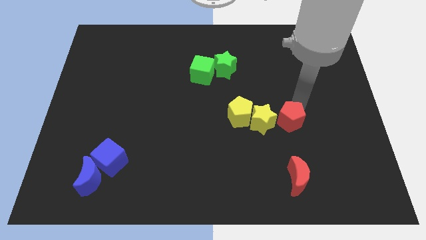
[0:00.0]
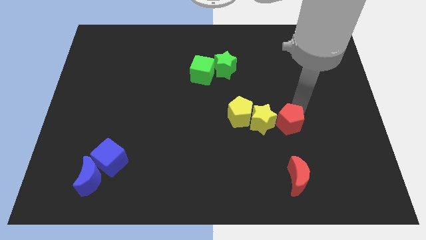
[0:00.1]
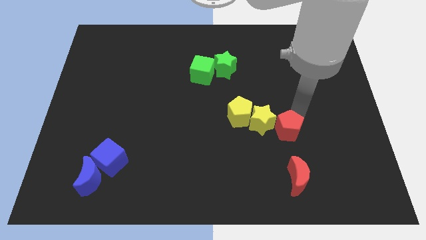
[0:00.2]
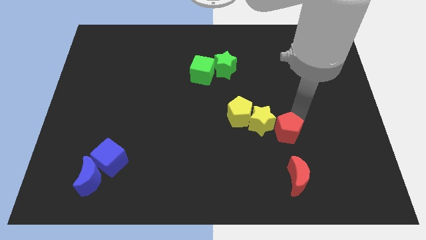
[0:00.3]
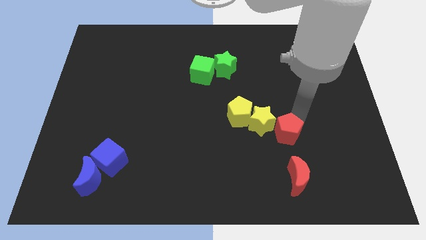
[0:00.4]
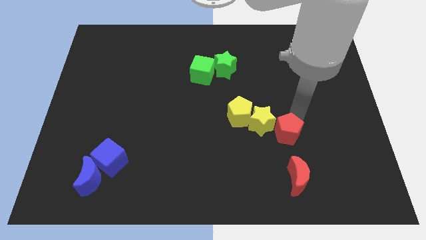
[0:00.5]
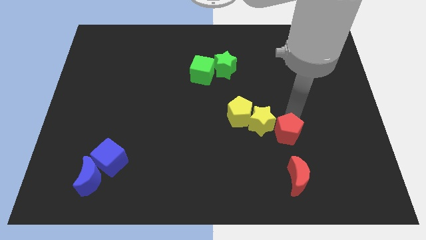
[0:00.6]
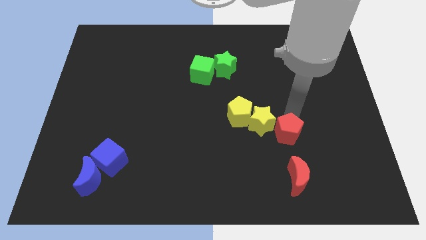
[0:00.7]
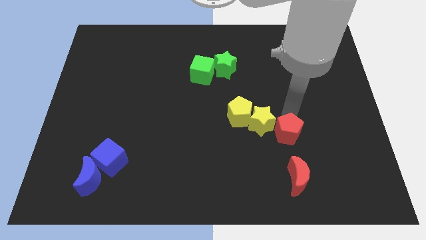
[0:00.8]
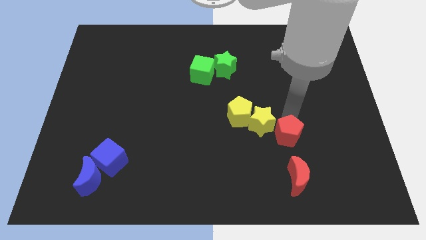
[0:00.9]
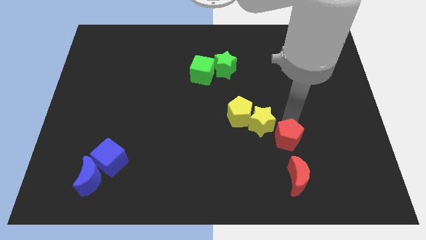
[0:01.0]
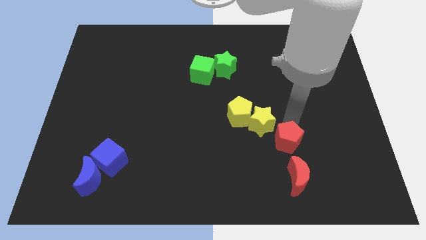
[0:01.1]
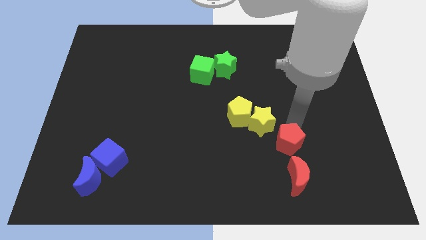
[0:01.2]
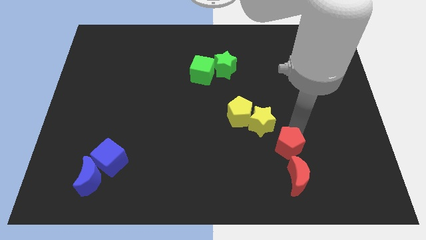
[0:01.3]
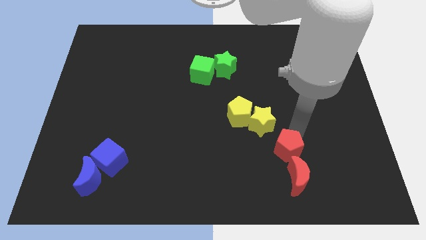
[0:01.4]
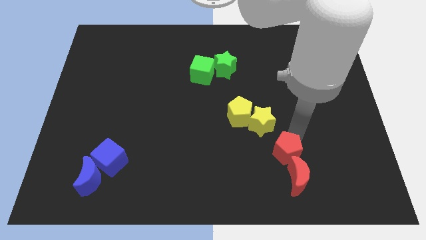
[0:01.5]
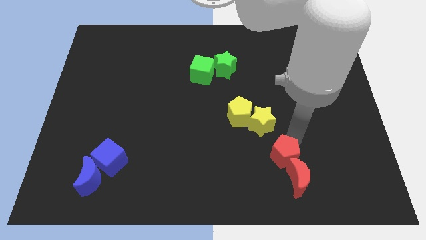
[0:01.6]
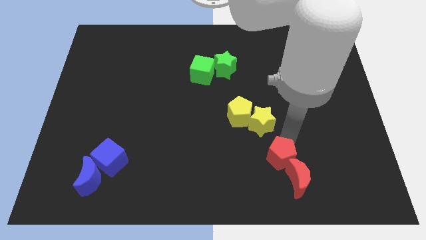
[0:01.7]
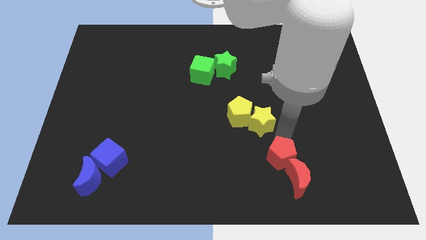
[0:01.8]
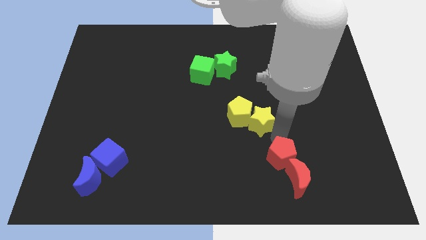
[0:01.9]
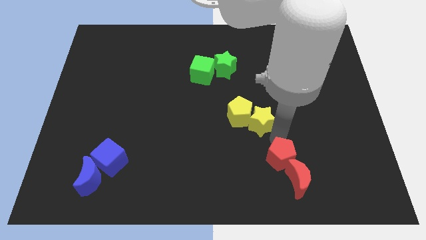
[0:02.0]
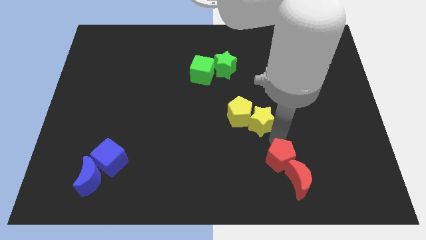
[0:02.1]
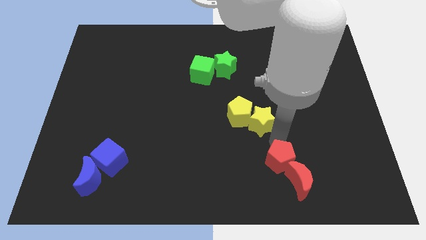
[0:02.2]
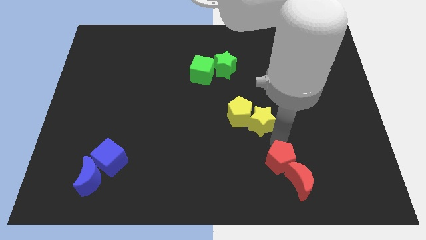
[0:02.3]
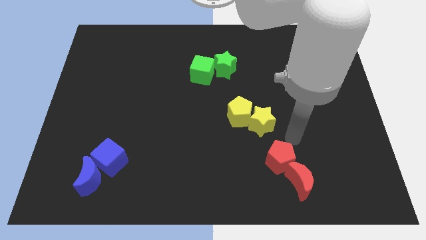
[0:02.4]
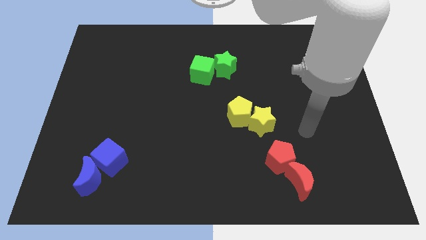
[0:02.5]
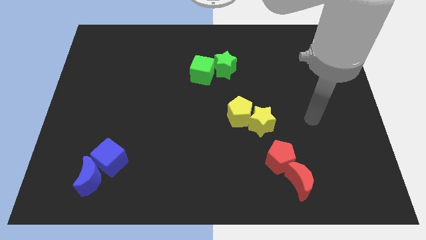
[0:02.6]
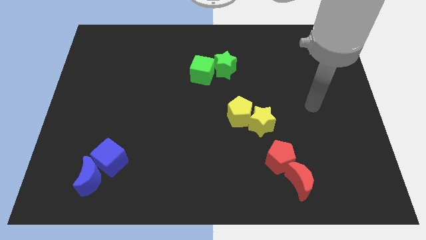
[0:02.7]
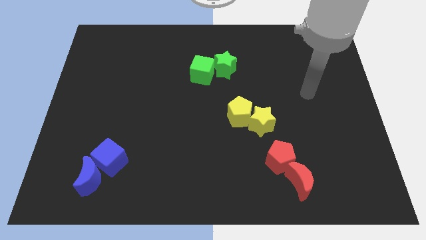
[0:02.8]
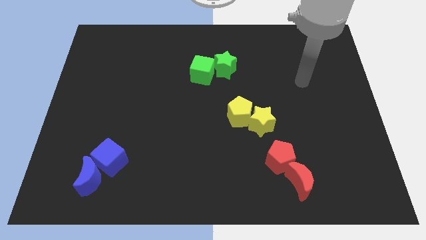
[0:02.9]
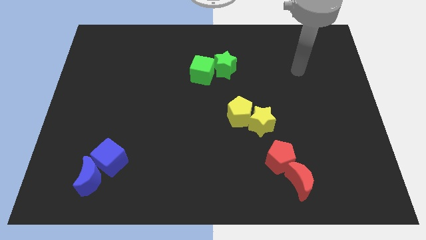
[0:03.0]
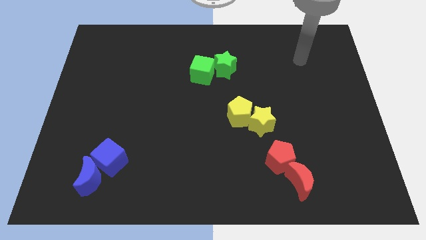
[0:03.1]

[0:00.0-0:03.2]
move the red pentagon into the red moon

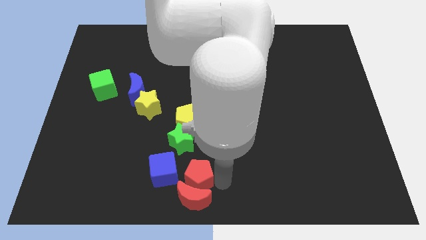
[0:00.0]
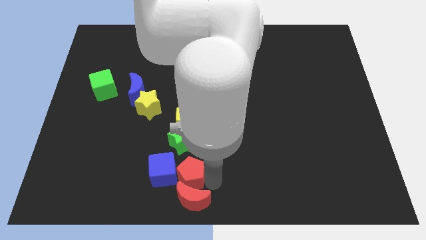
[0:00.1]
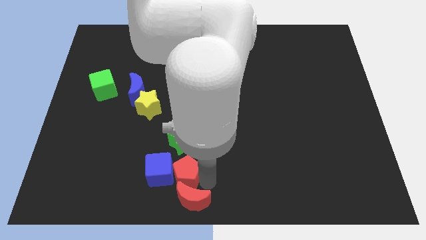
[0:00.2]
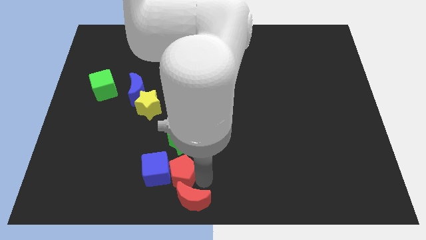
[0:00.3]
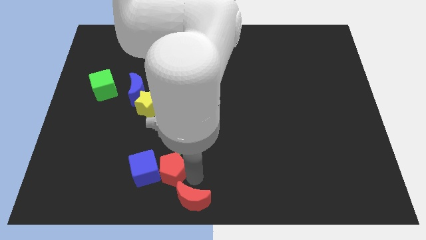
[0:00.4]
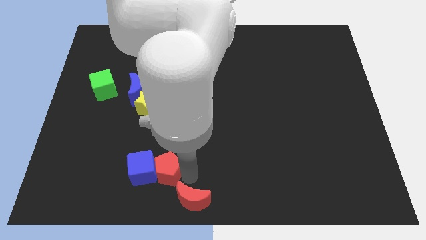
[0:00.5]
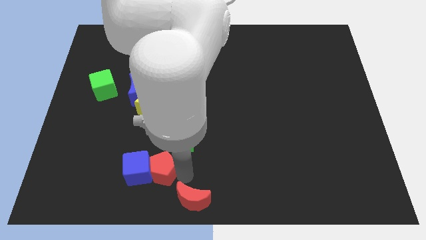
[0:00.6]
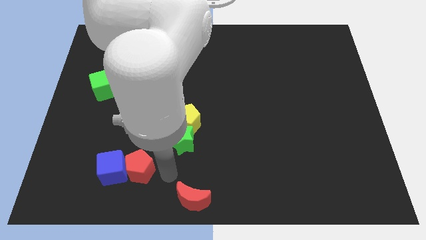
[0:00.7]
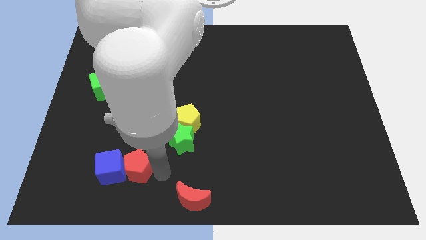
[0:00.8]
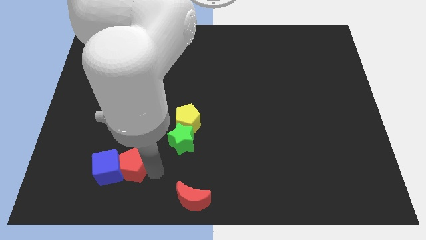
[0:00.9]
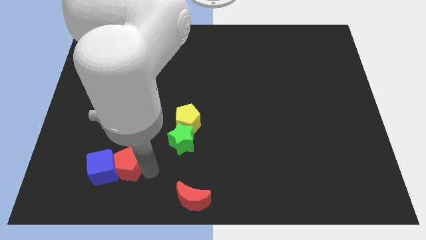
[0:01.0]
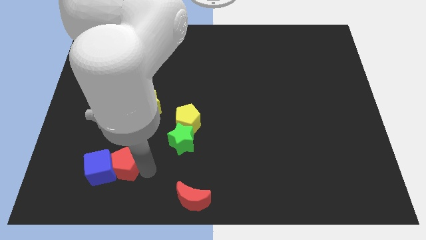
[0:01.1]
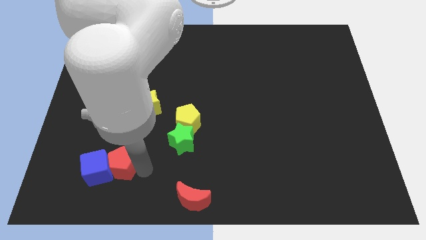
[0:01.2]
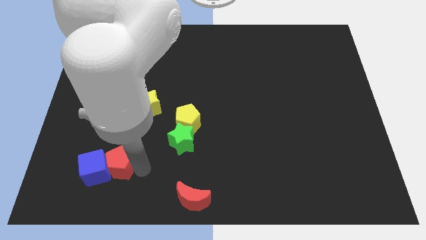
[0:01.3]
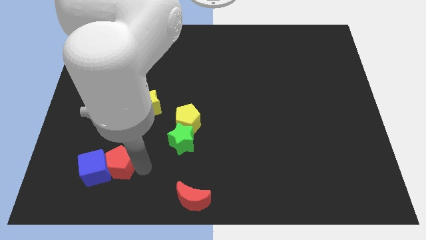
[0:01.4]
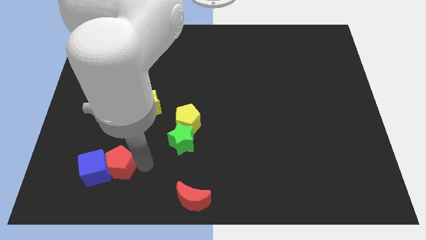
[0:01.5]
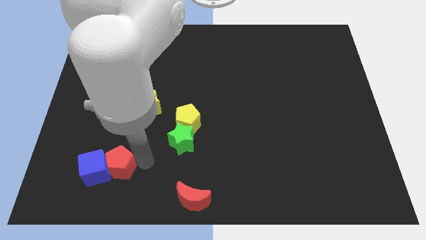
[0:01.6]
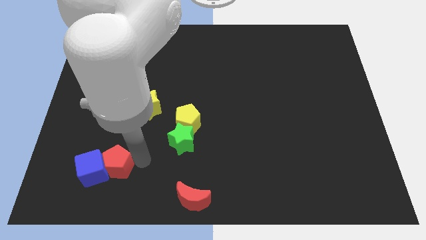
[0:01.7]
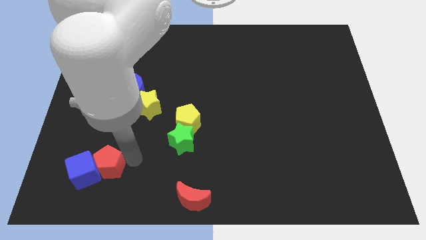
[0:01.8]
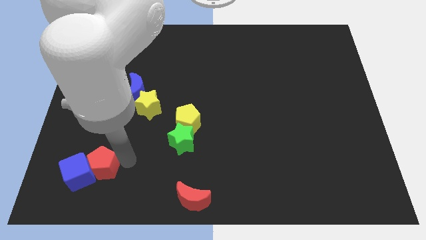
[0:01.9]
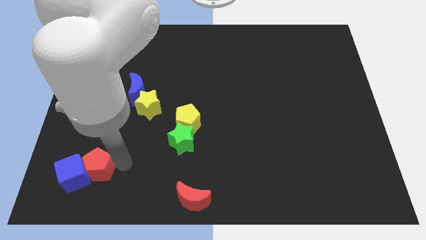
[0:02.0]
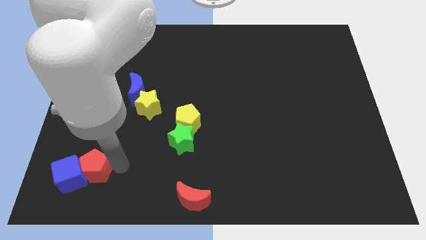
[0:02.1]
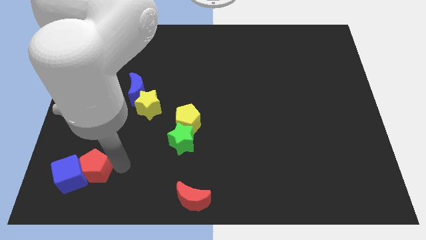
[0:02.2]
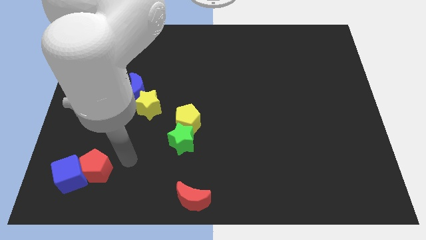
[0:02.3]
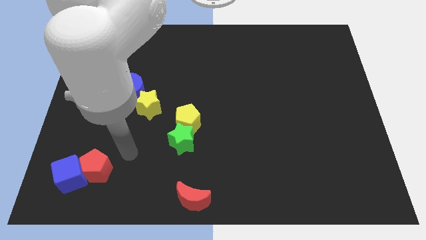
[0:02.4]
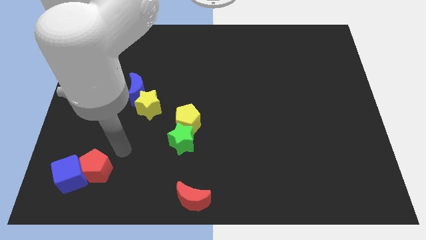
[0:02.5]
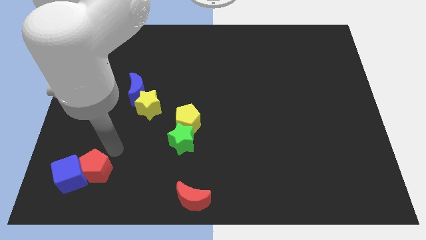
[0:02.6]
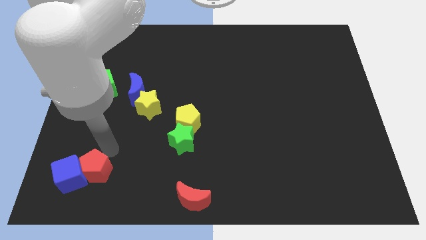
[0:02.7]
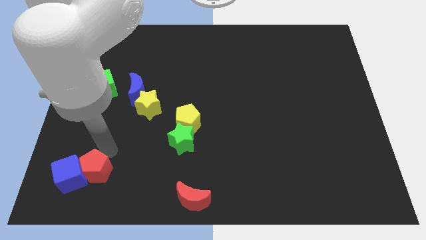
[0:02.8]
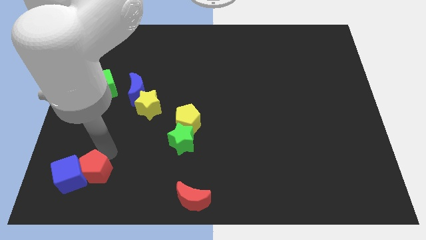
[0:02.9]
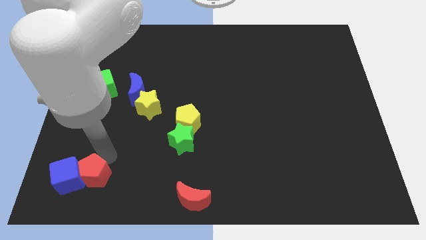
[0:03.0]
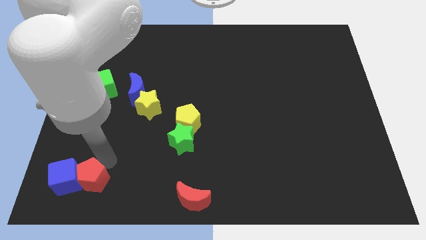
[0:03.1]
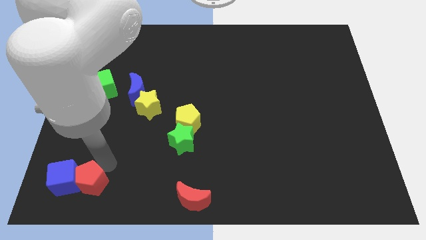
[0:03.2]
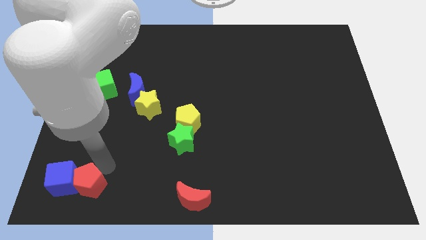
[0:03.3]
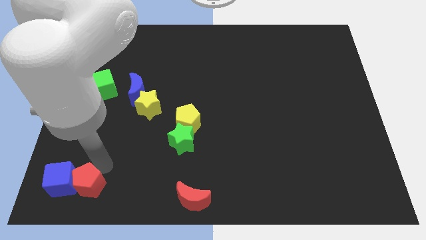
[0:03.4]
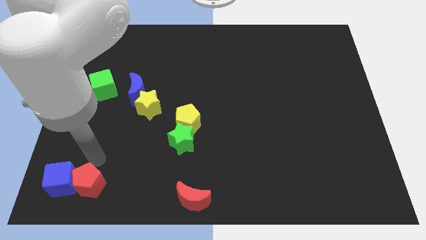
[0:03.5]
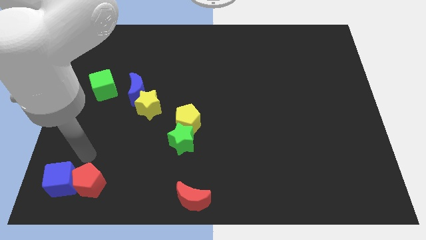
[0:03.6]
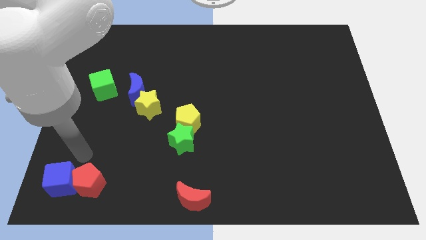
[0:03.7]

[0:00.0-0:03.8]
move the red pentagon along the blue cube towards the bottom left

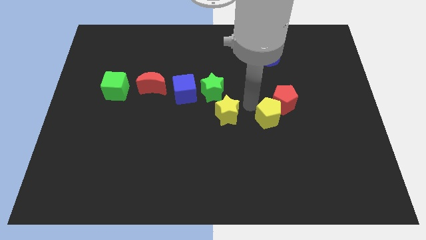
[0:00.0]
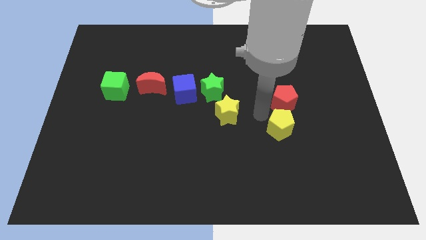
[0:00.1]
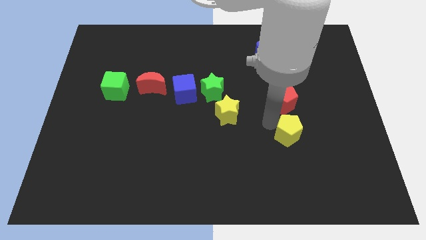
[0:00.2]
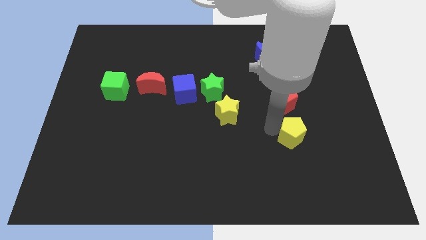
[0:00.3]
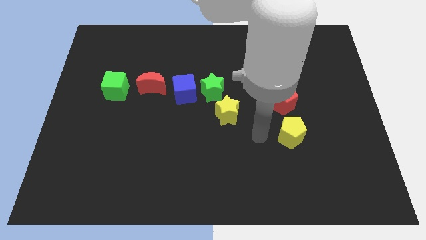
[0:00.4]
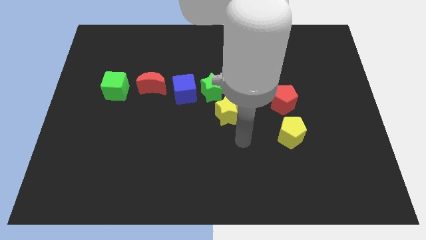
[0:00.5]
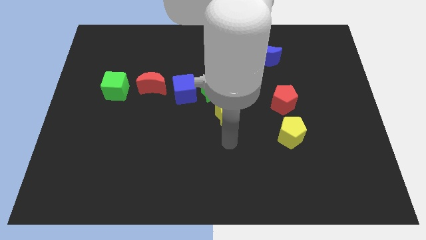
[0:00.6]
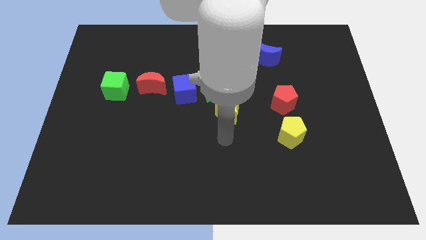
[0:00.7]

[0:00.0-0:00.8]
place yellow pentagon below red pentagon

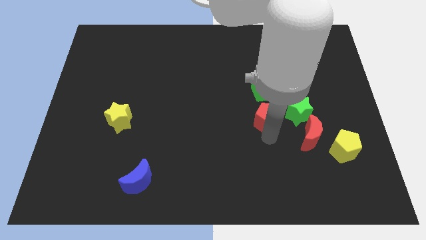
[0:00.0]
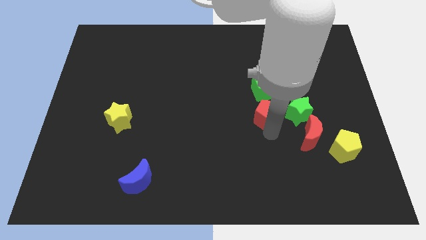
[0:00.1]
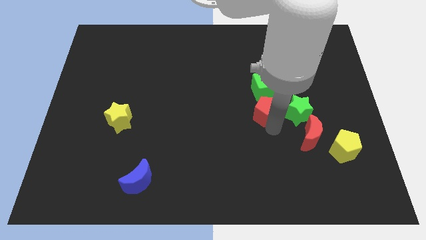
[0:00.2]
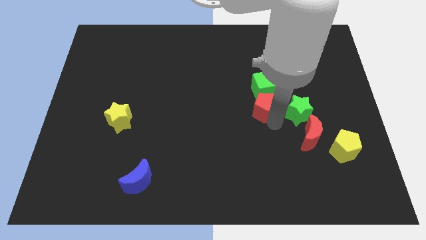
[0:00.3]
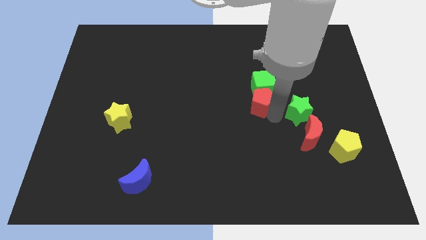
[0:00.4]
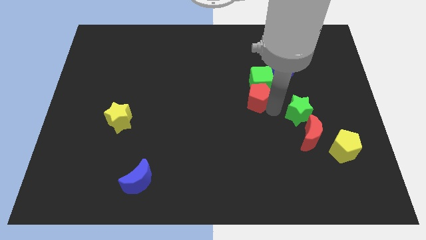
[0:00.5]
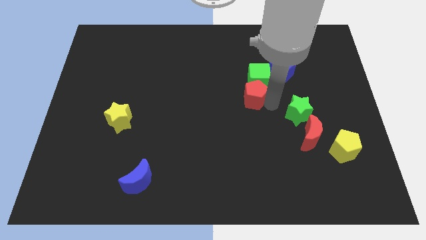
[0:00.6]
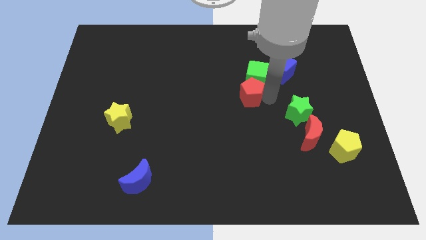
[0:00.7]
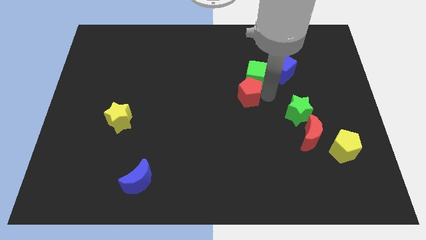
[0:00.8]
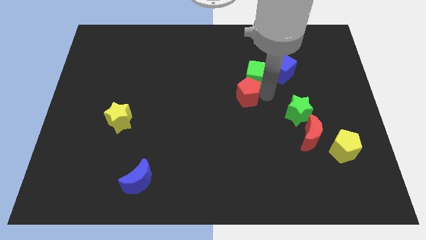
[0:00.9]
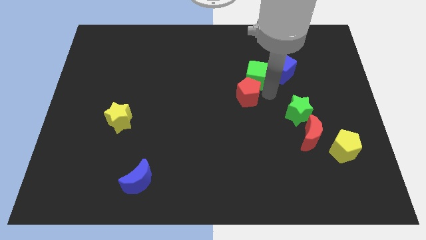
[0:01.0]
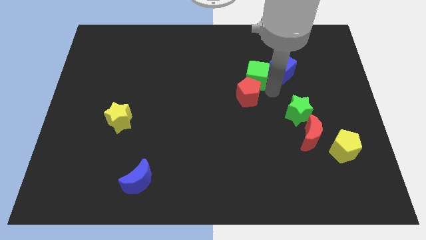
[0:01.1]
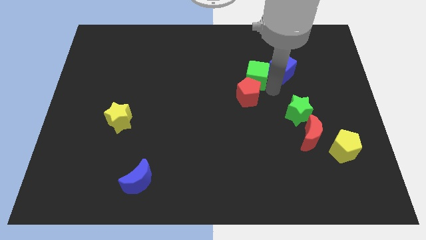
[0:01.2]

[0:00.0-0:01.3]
push the red pentagon into green cube
